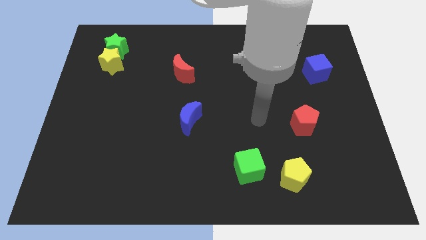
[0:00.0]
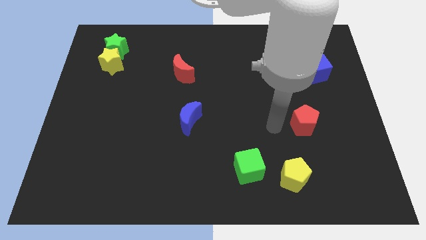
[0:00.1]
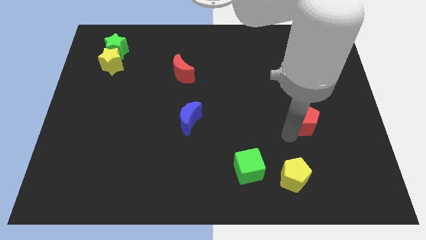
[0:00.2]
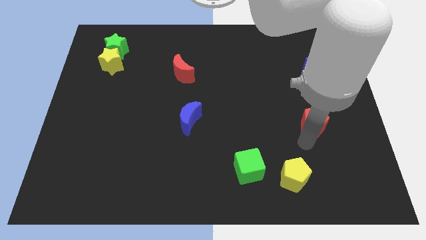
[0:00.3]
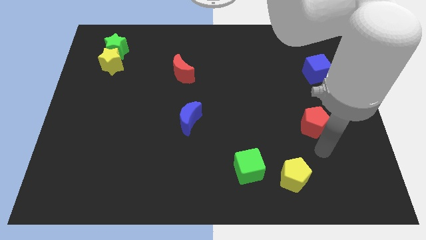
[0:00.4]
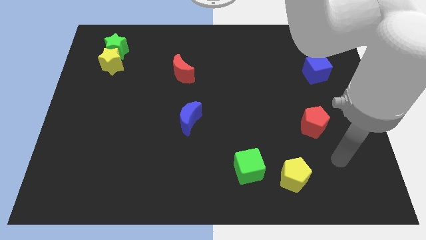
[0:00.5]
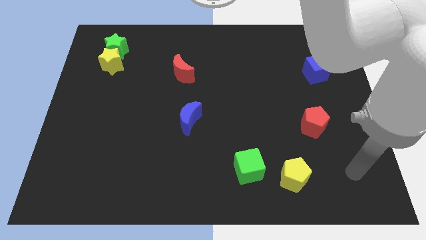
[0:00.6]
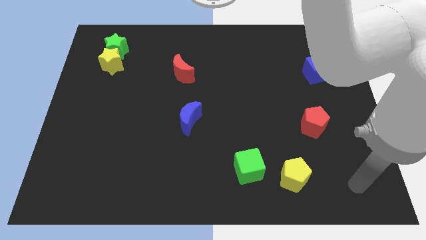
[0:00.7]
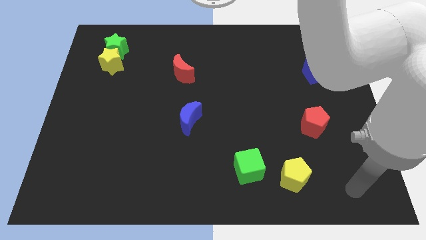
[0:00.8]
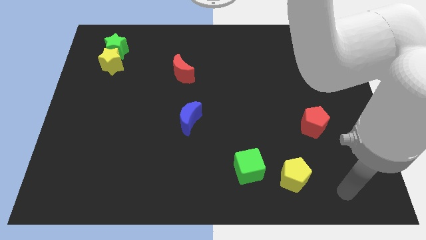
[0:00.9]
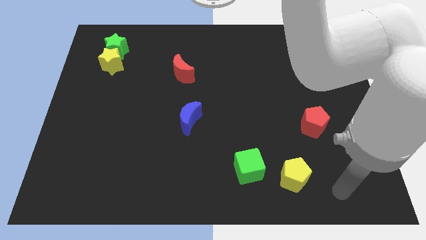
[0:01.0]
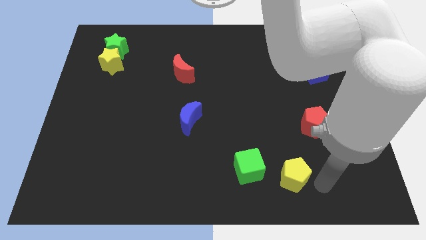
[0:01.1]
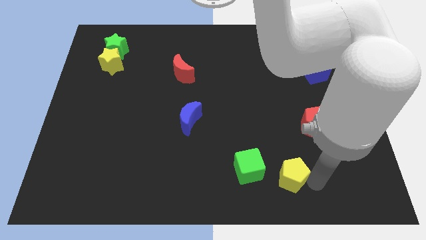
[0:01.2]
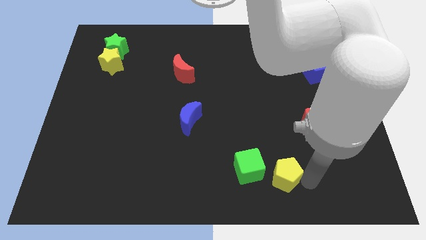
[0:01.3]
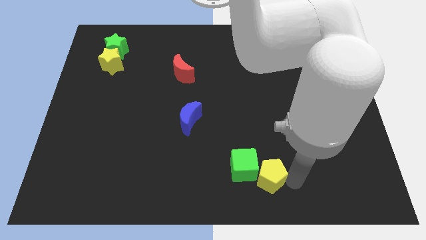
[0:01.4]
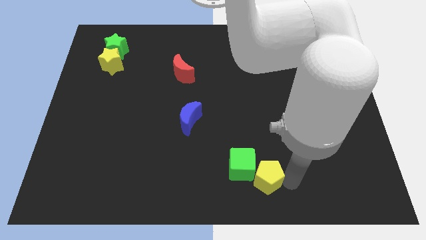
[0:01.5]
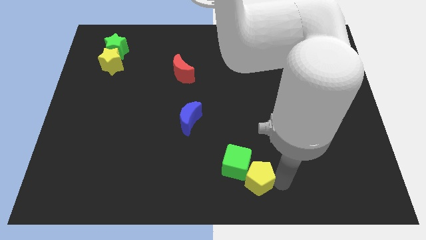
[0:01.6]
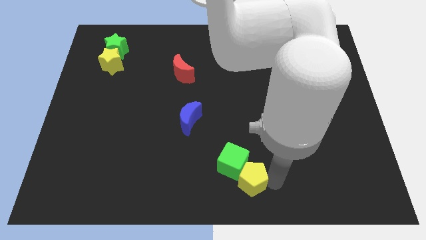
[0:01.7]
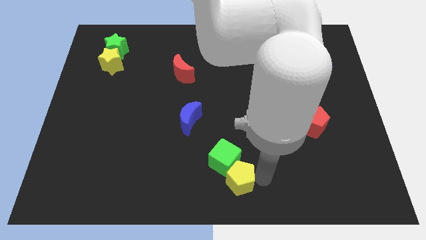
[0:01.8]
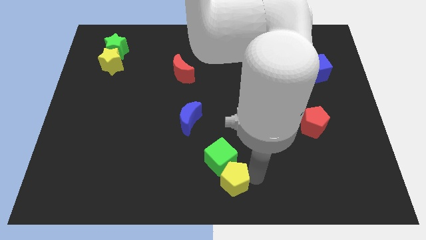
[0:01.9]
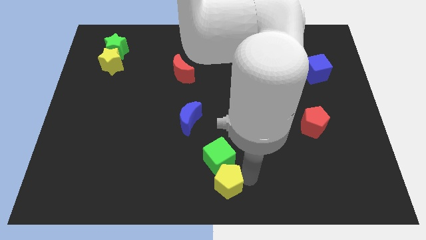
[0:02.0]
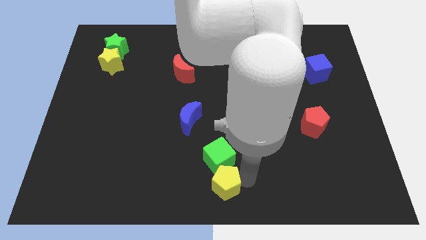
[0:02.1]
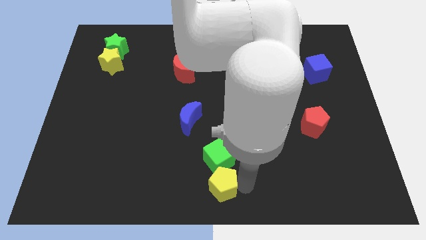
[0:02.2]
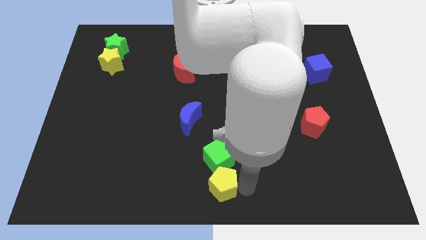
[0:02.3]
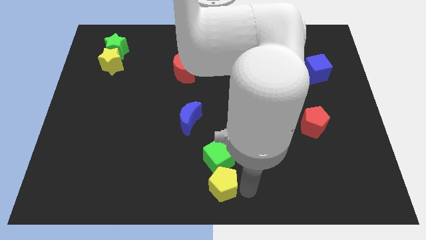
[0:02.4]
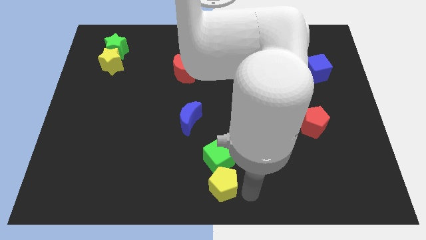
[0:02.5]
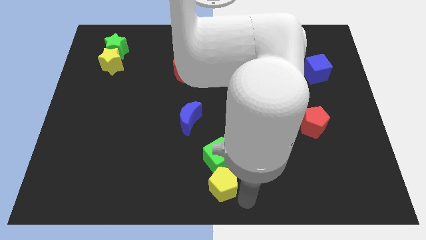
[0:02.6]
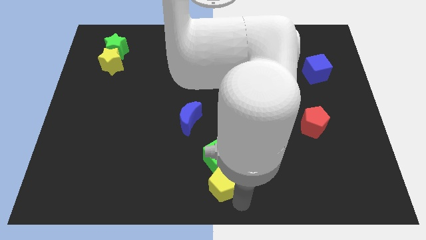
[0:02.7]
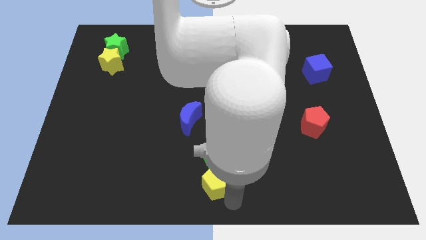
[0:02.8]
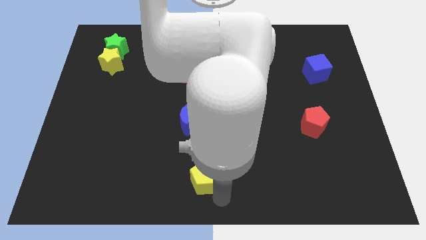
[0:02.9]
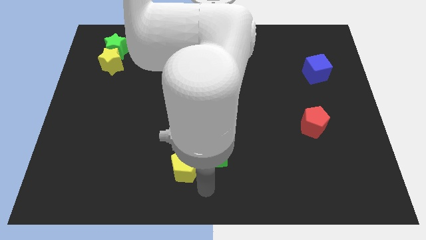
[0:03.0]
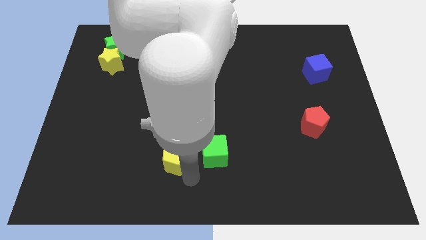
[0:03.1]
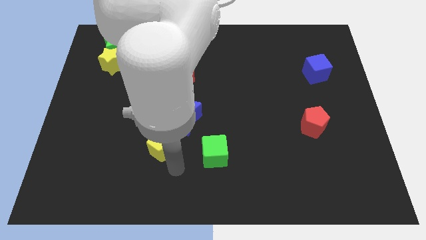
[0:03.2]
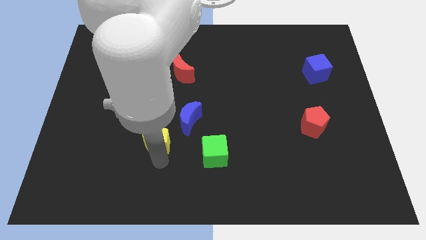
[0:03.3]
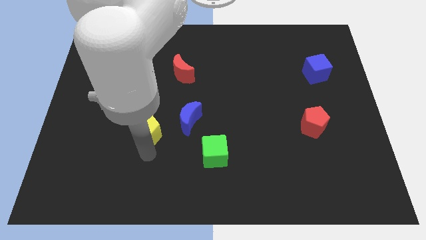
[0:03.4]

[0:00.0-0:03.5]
push the yellow pentagon to the cente

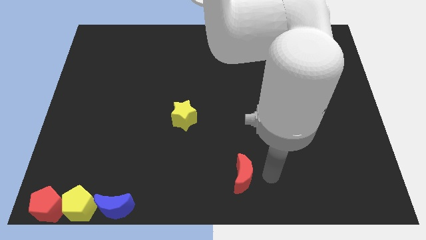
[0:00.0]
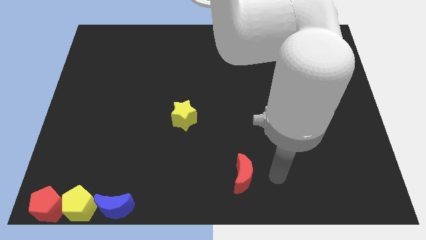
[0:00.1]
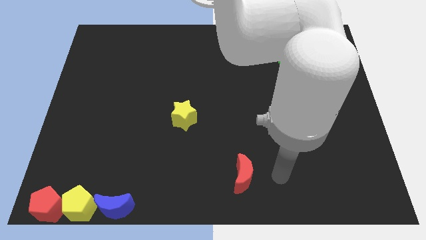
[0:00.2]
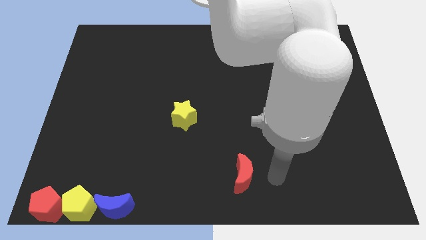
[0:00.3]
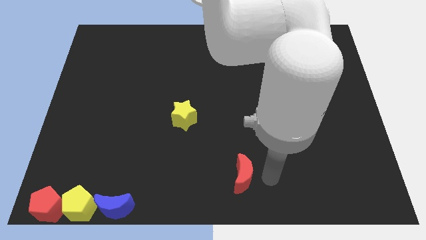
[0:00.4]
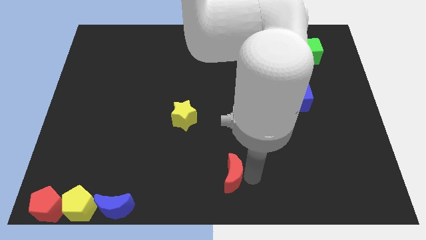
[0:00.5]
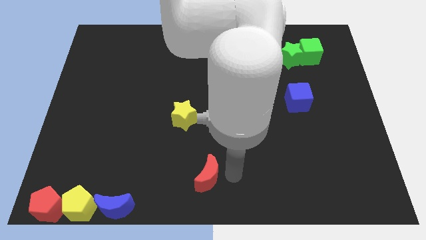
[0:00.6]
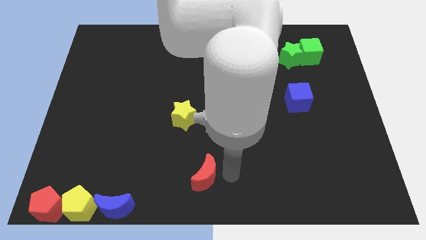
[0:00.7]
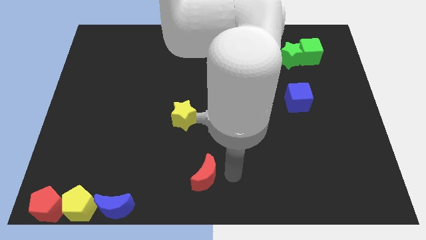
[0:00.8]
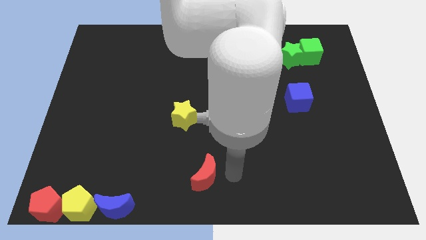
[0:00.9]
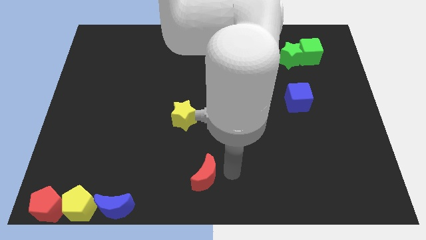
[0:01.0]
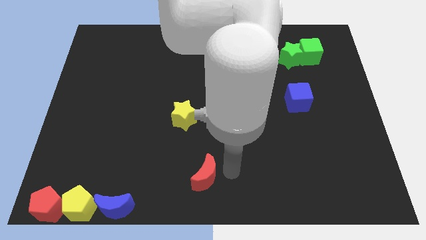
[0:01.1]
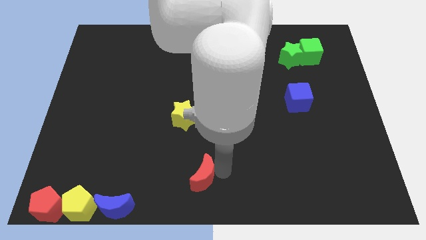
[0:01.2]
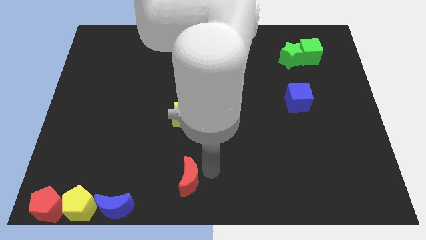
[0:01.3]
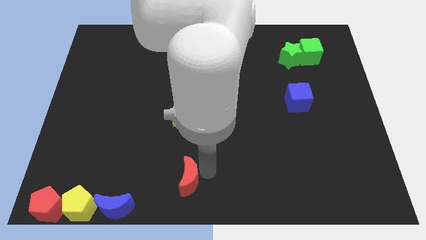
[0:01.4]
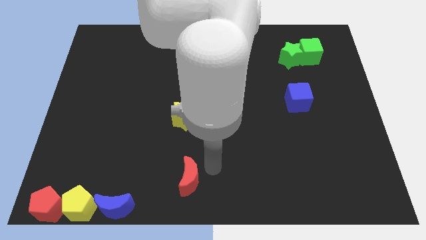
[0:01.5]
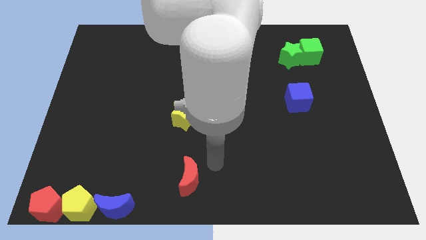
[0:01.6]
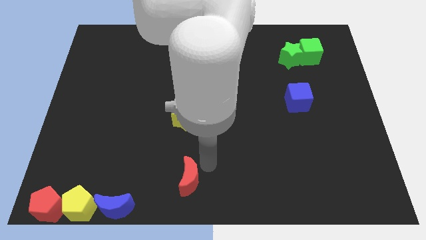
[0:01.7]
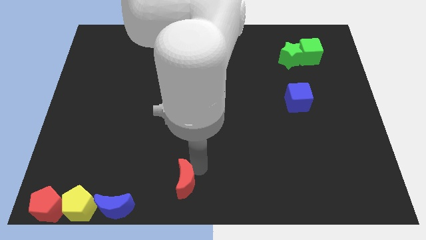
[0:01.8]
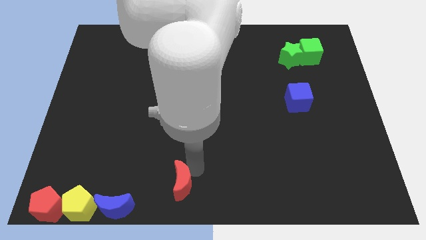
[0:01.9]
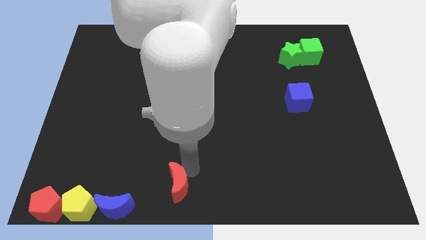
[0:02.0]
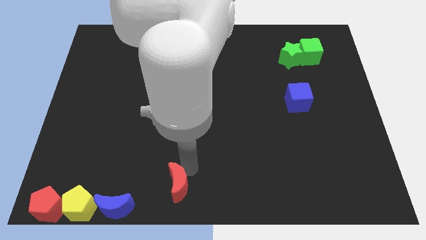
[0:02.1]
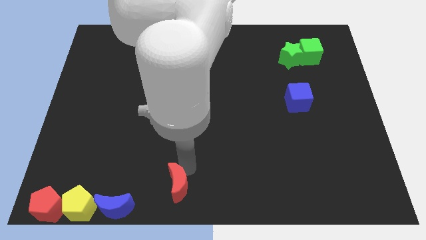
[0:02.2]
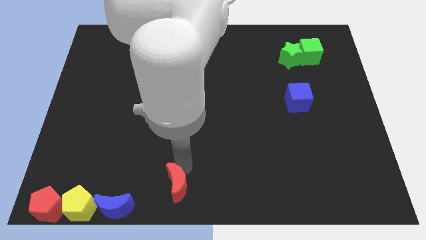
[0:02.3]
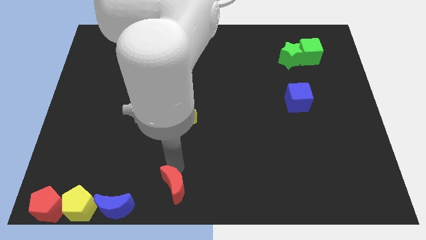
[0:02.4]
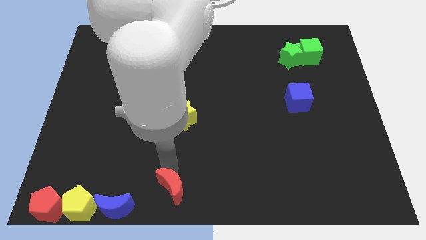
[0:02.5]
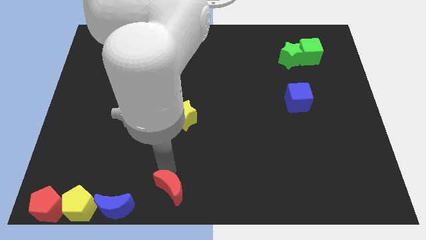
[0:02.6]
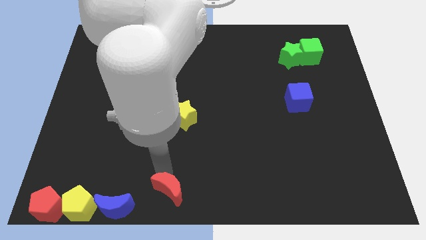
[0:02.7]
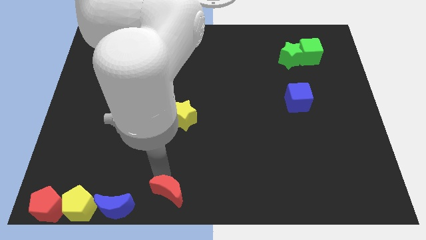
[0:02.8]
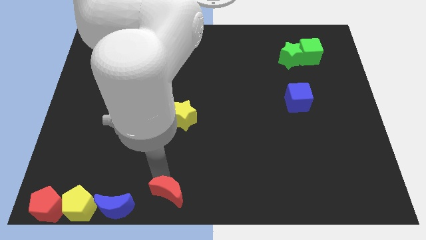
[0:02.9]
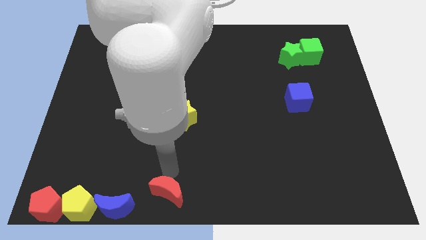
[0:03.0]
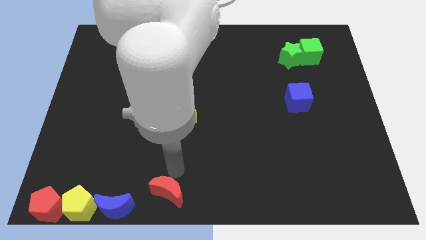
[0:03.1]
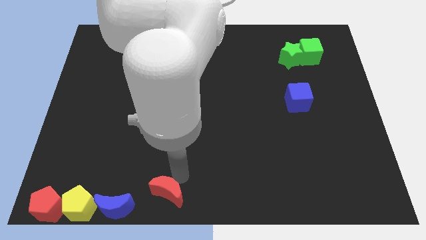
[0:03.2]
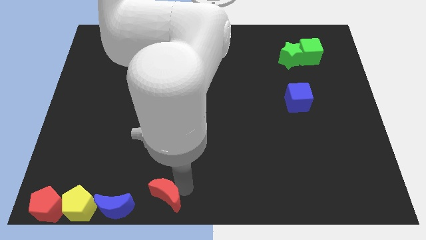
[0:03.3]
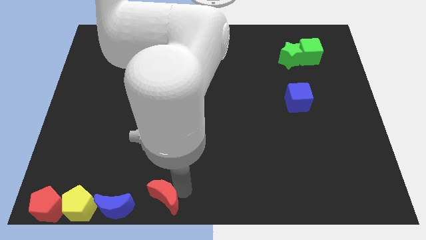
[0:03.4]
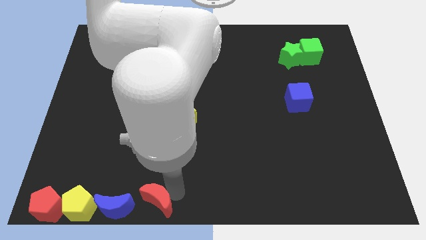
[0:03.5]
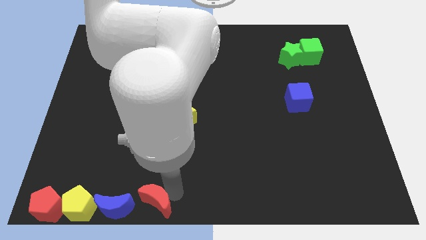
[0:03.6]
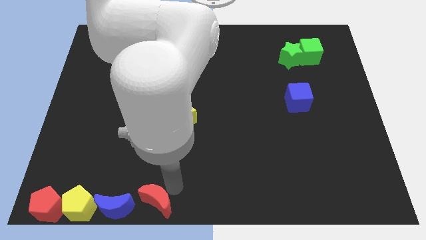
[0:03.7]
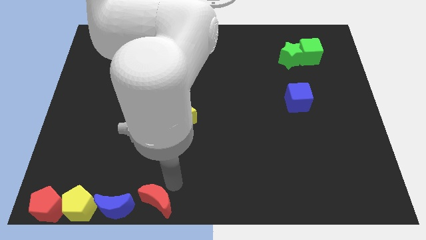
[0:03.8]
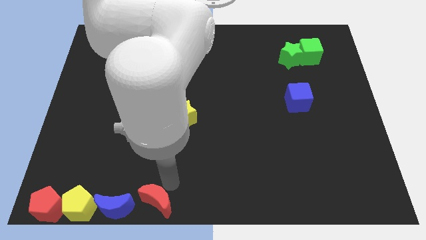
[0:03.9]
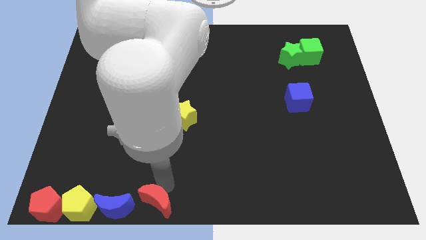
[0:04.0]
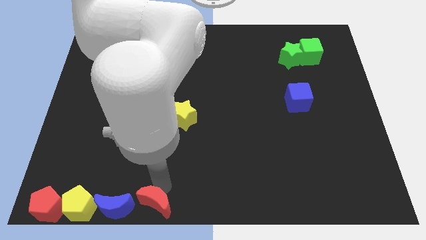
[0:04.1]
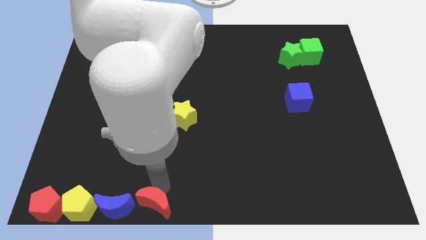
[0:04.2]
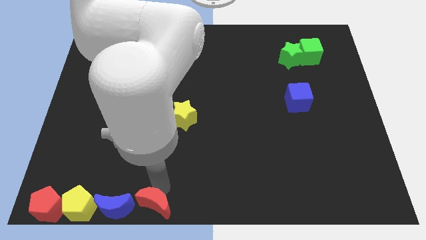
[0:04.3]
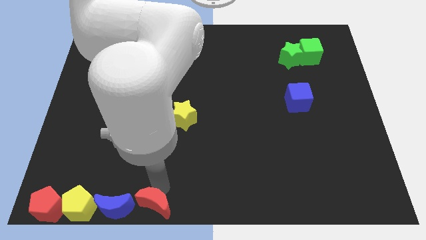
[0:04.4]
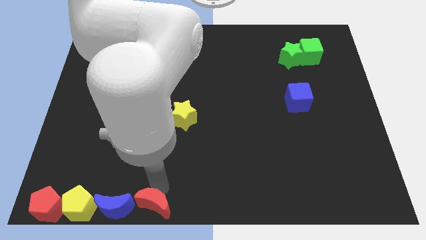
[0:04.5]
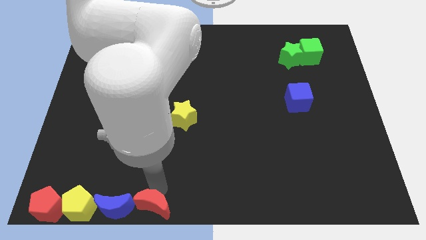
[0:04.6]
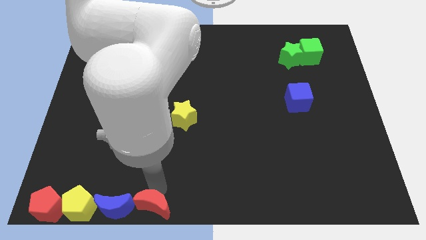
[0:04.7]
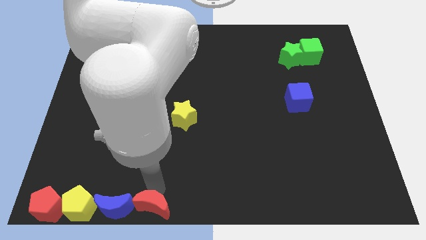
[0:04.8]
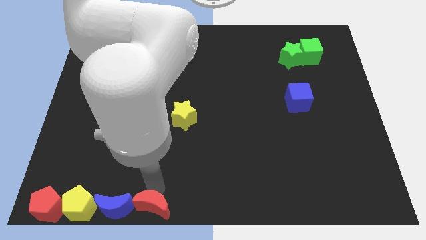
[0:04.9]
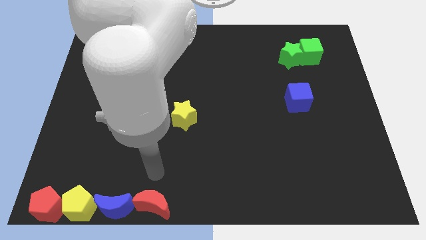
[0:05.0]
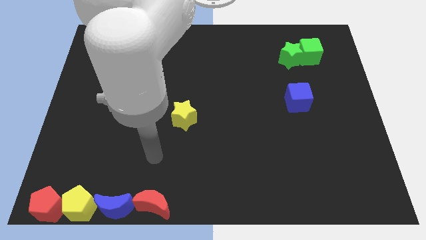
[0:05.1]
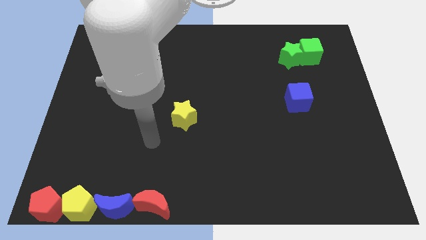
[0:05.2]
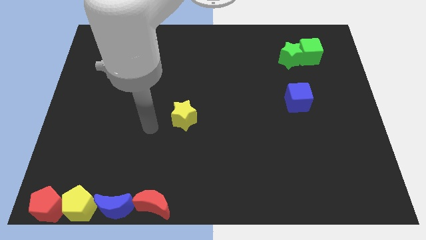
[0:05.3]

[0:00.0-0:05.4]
place the red moon right to the blue moon

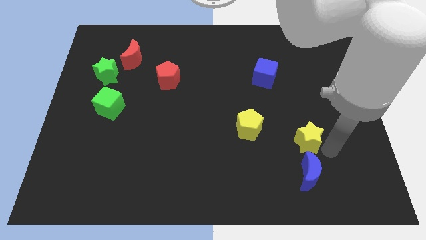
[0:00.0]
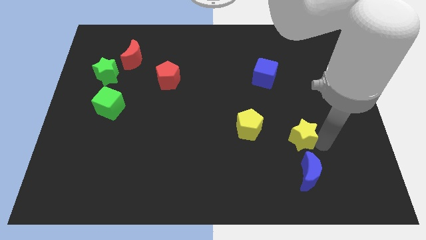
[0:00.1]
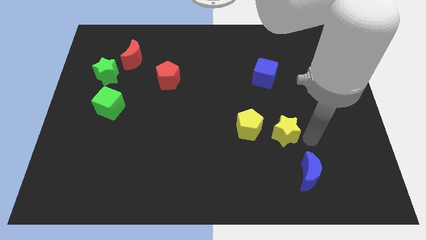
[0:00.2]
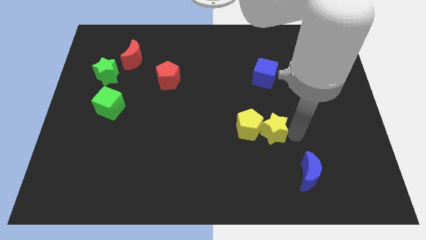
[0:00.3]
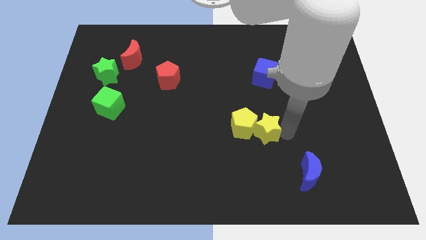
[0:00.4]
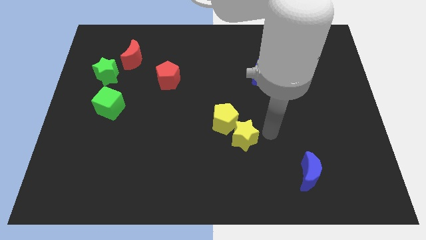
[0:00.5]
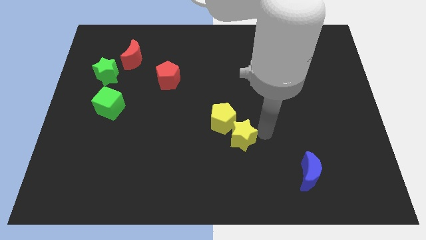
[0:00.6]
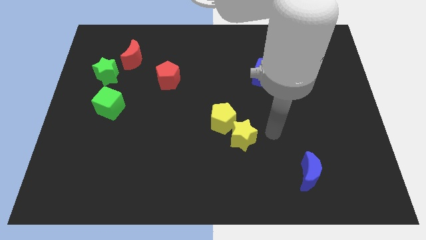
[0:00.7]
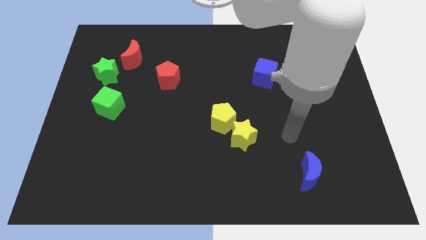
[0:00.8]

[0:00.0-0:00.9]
push the yellow star to the right of the yellow pentagon
